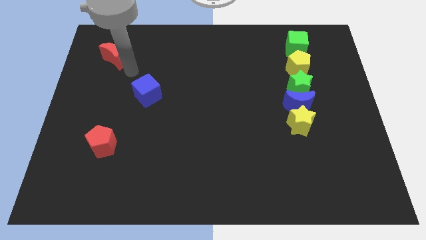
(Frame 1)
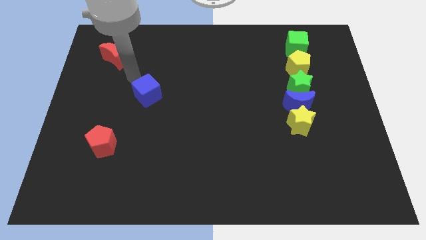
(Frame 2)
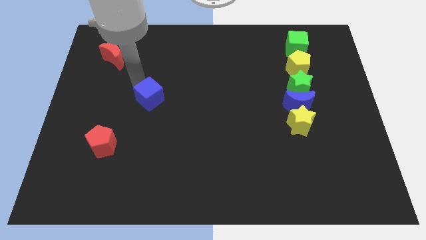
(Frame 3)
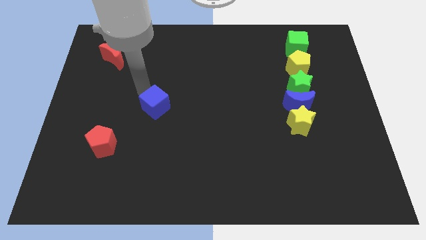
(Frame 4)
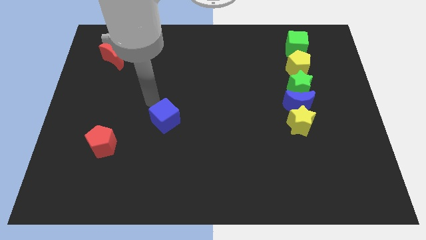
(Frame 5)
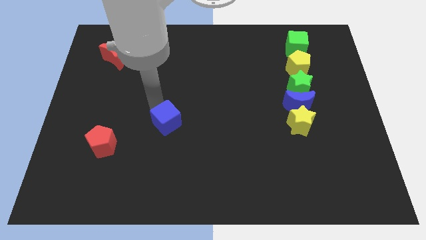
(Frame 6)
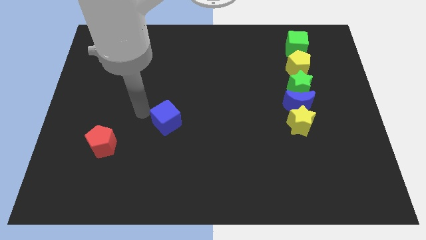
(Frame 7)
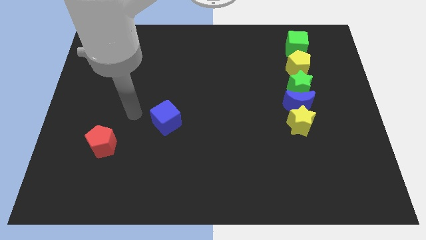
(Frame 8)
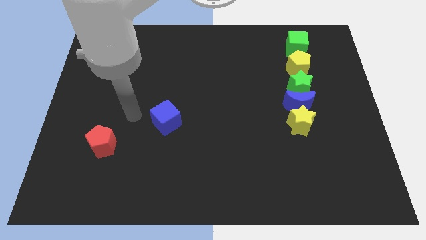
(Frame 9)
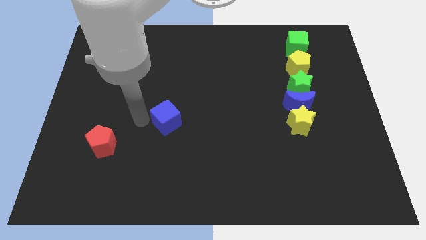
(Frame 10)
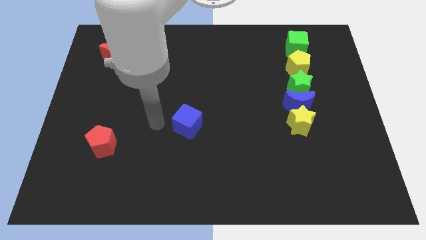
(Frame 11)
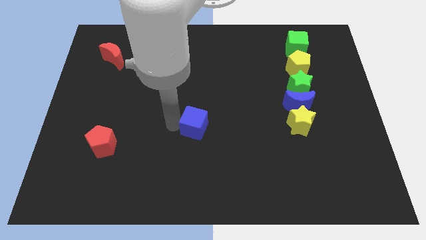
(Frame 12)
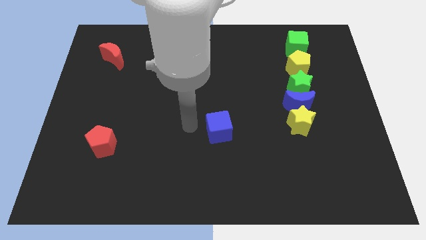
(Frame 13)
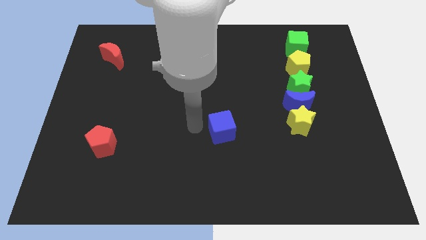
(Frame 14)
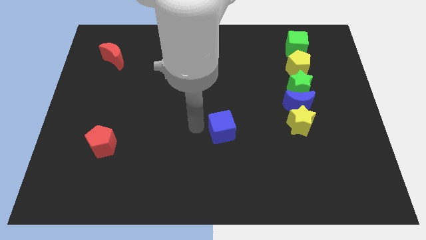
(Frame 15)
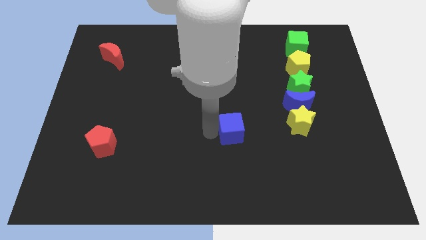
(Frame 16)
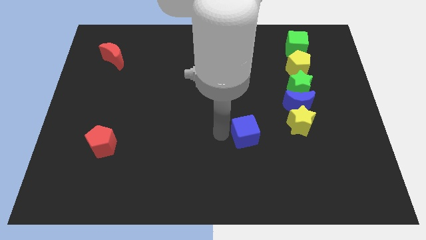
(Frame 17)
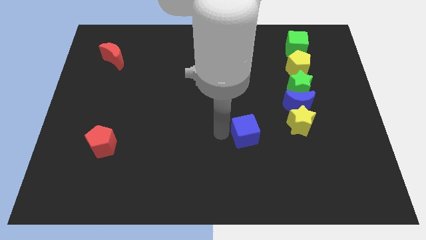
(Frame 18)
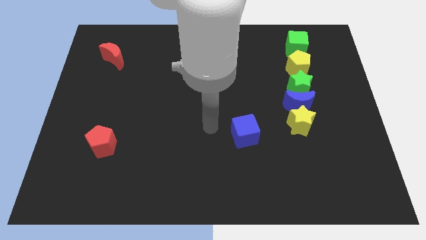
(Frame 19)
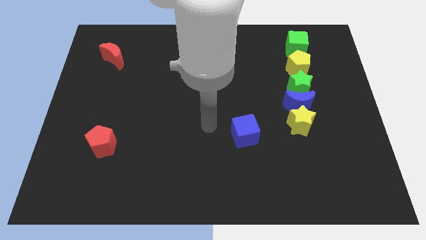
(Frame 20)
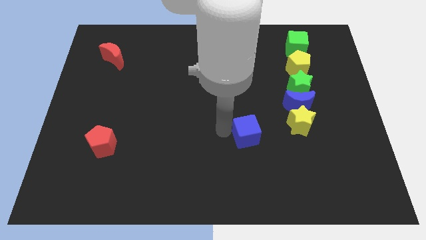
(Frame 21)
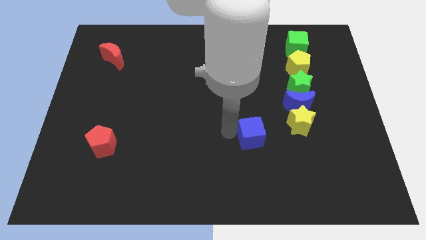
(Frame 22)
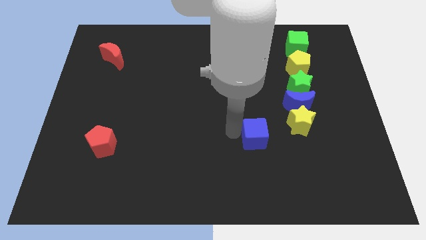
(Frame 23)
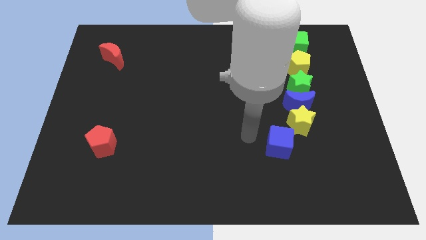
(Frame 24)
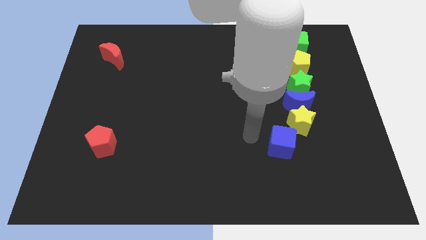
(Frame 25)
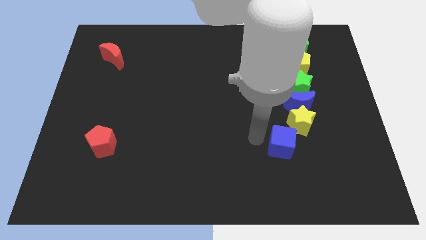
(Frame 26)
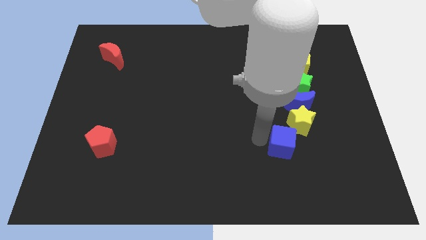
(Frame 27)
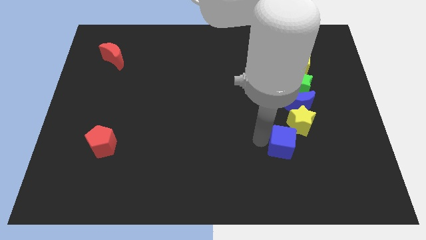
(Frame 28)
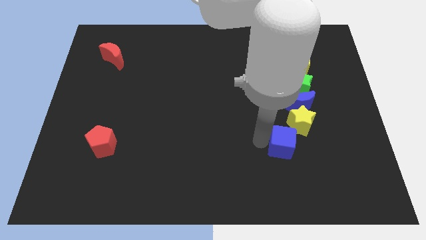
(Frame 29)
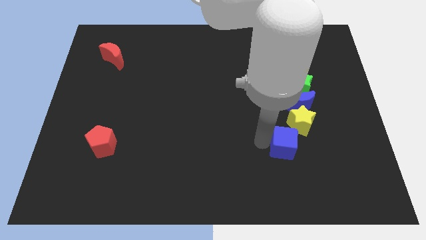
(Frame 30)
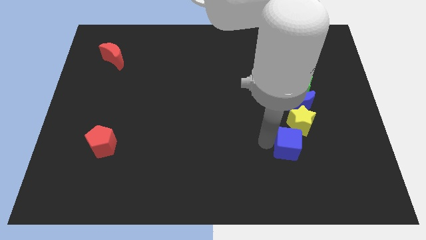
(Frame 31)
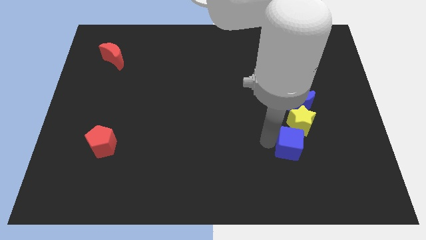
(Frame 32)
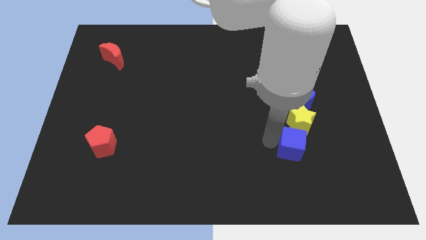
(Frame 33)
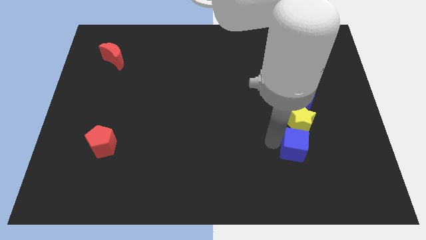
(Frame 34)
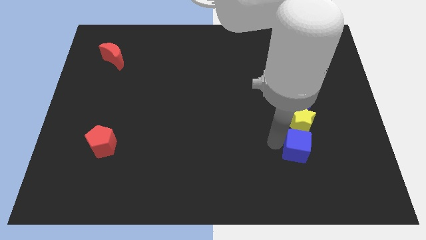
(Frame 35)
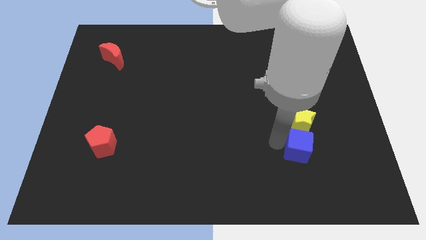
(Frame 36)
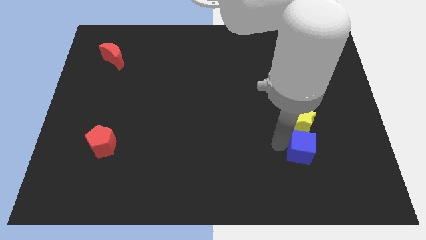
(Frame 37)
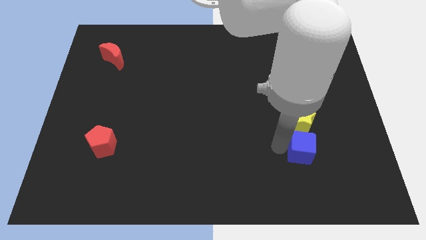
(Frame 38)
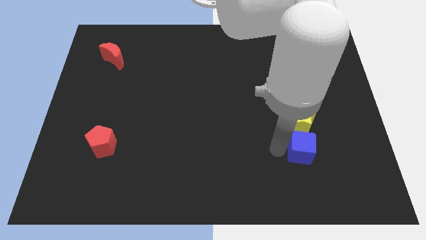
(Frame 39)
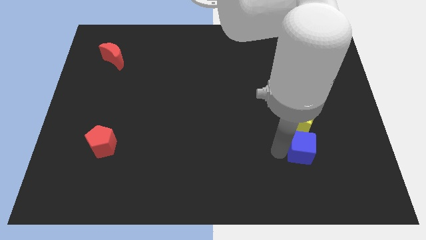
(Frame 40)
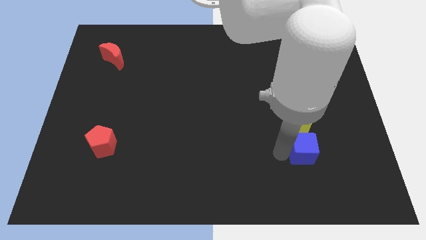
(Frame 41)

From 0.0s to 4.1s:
place the blue cube under the yellow star

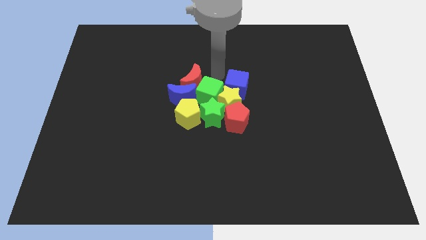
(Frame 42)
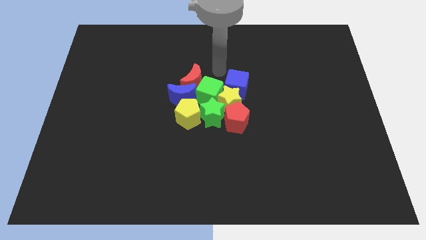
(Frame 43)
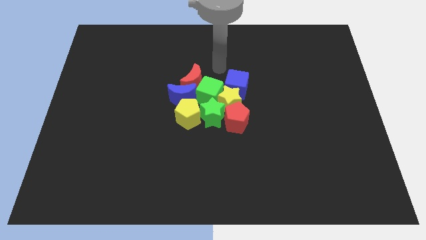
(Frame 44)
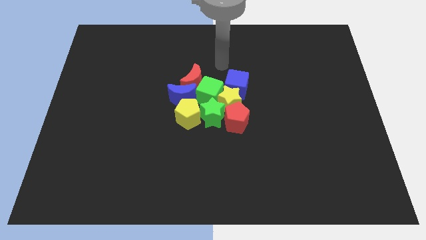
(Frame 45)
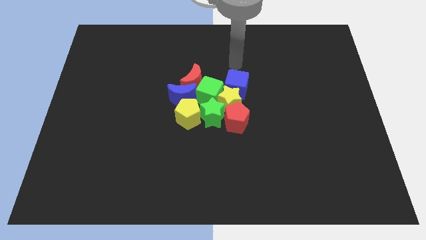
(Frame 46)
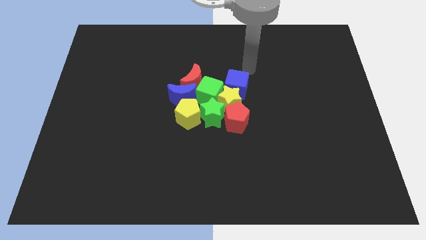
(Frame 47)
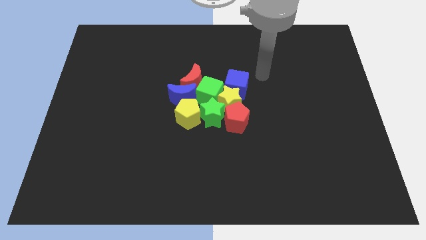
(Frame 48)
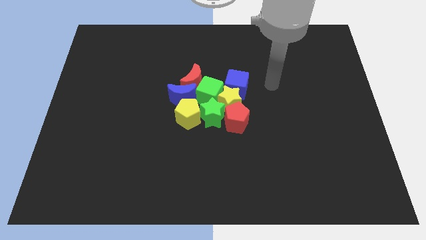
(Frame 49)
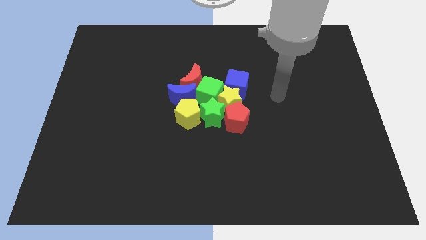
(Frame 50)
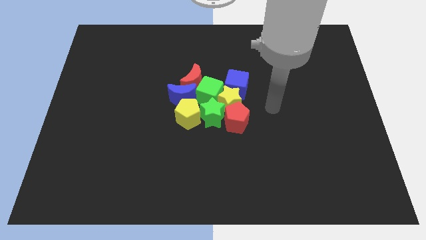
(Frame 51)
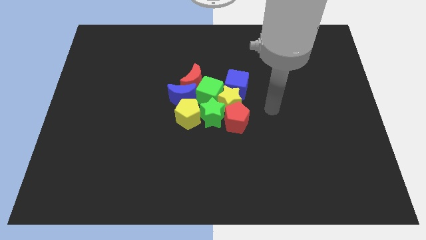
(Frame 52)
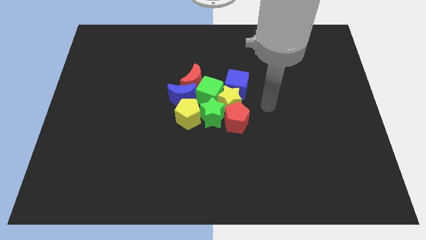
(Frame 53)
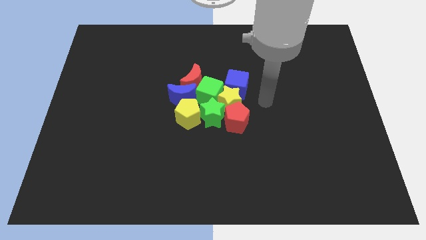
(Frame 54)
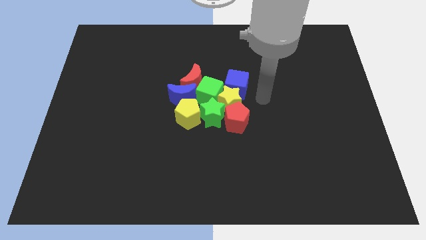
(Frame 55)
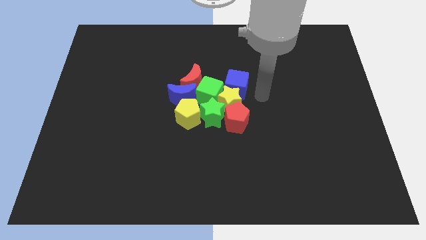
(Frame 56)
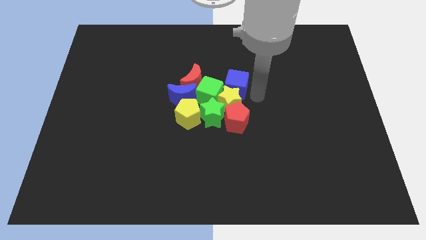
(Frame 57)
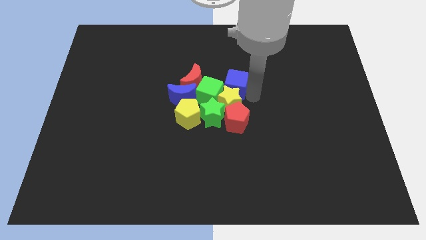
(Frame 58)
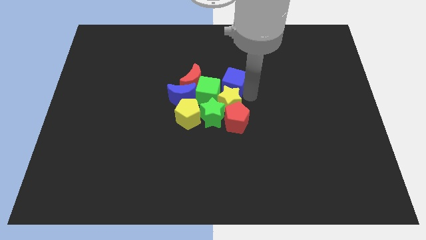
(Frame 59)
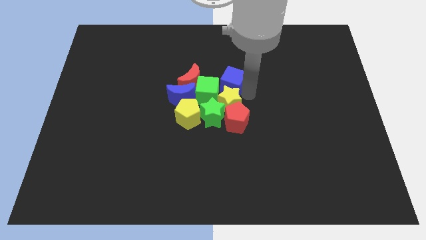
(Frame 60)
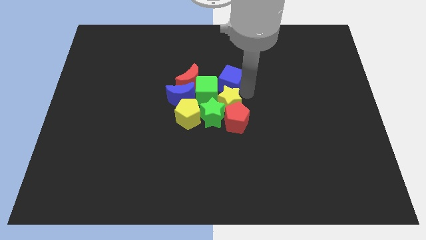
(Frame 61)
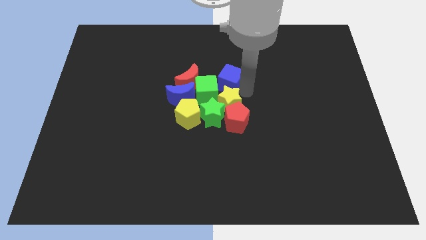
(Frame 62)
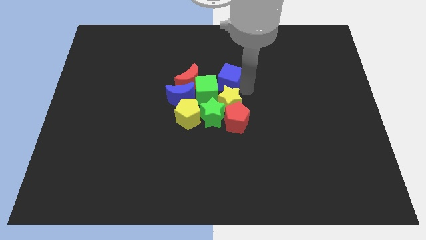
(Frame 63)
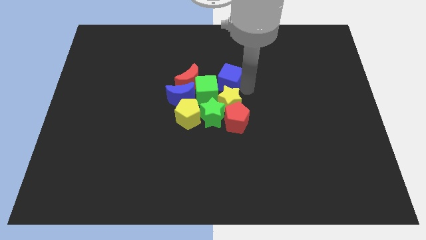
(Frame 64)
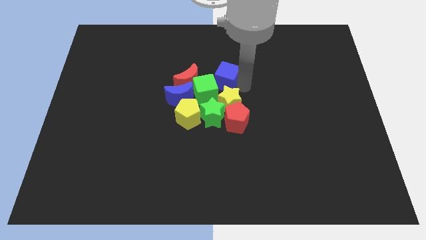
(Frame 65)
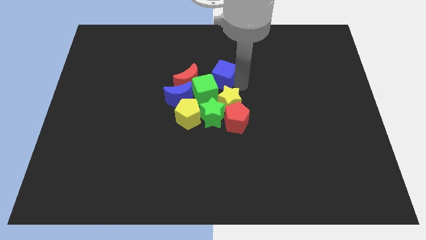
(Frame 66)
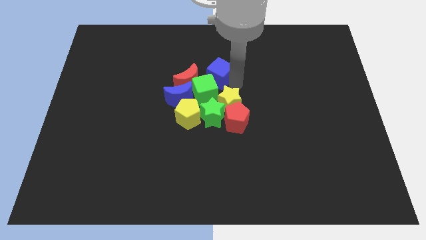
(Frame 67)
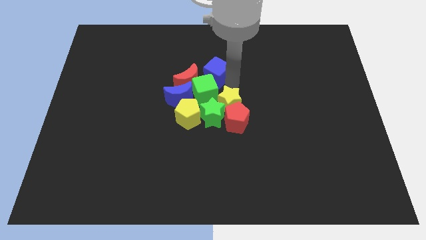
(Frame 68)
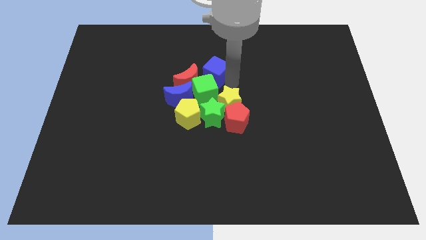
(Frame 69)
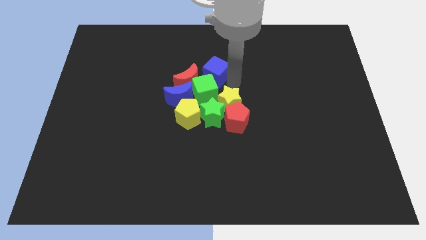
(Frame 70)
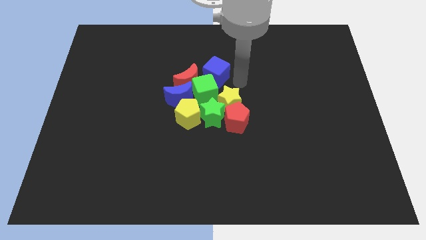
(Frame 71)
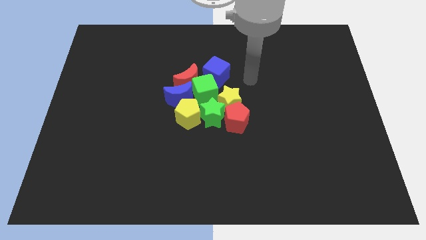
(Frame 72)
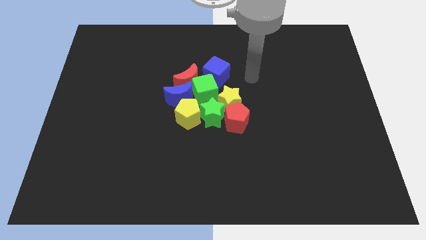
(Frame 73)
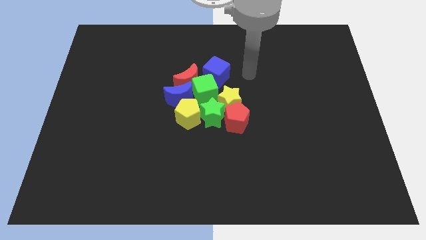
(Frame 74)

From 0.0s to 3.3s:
push the blue cube to the top of the green cube

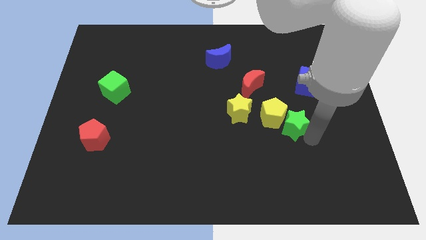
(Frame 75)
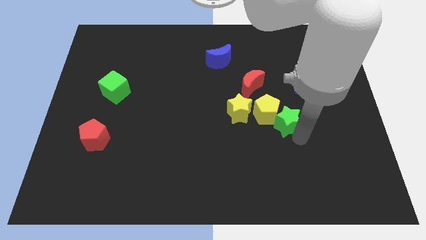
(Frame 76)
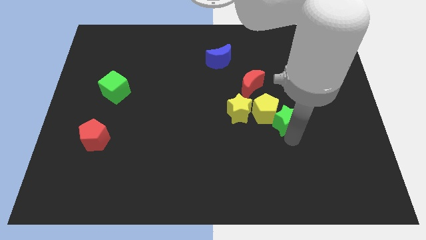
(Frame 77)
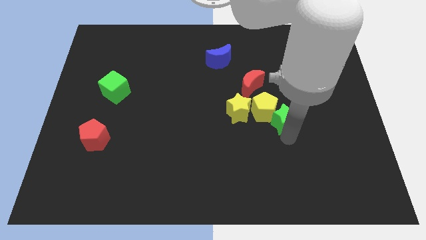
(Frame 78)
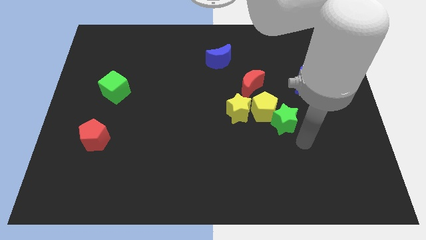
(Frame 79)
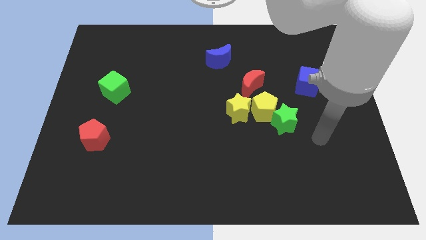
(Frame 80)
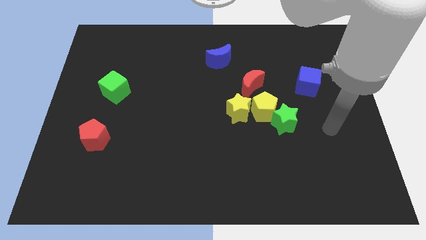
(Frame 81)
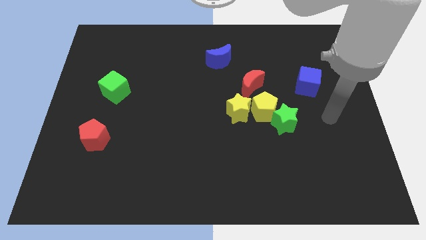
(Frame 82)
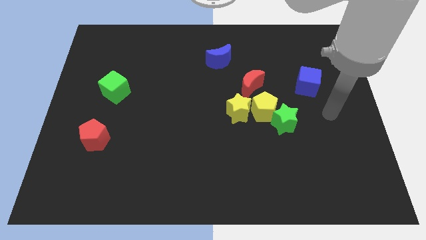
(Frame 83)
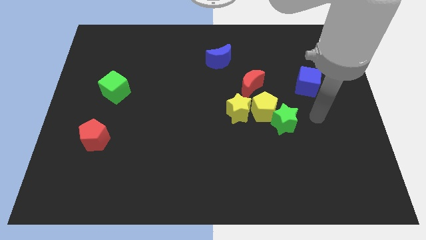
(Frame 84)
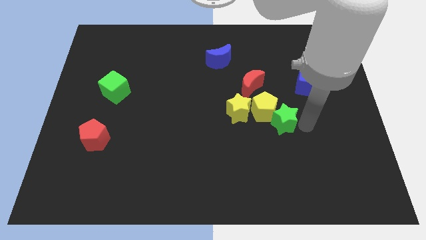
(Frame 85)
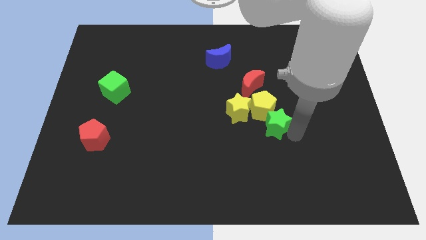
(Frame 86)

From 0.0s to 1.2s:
place the yellow pentagon at the right side of the yellow star

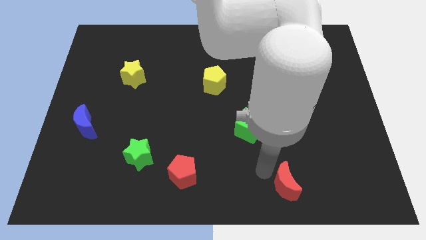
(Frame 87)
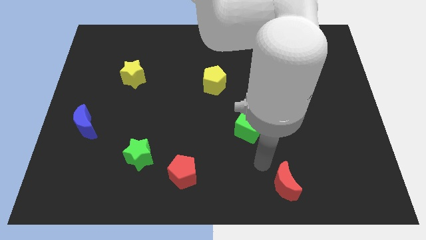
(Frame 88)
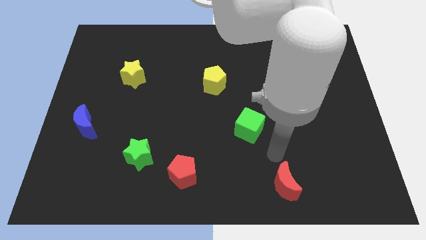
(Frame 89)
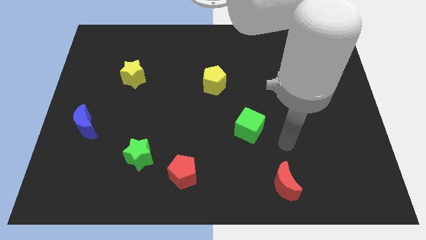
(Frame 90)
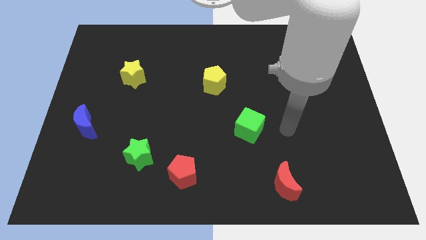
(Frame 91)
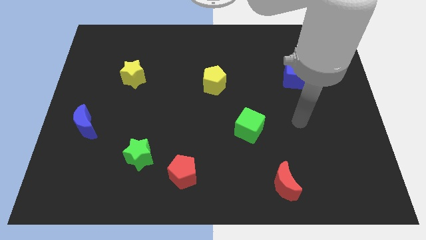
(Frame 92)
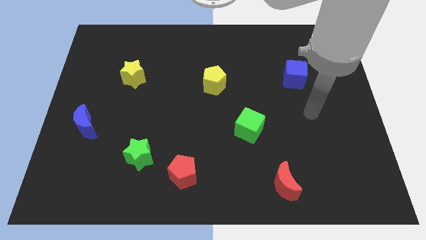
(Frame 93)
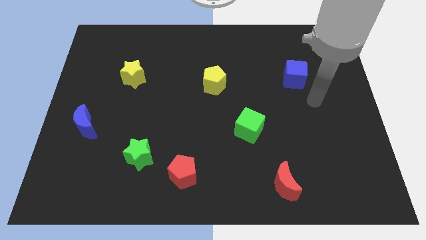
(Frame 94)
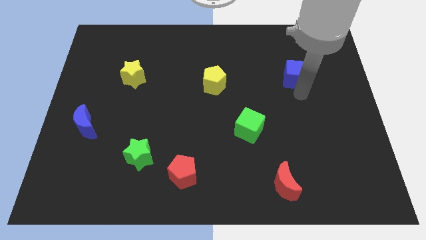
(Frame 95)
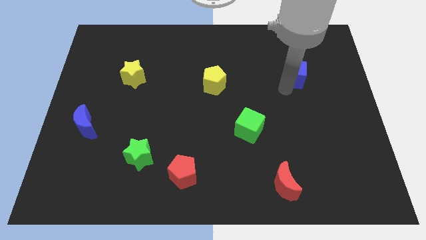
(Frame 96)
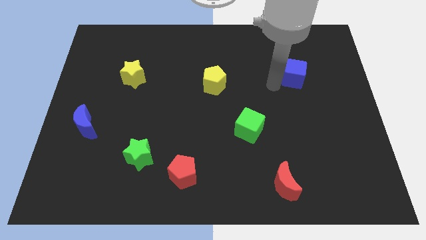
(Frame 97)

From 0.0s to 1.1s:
go near blue cube
